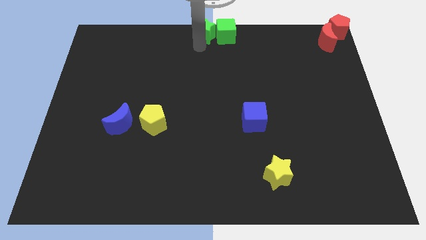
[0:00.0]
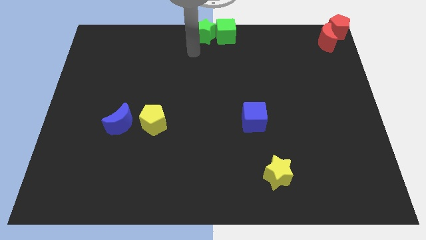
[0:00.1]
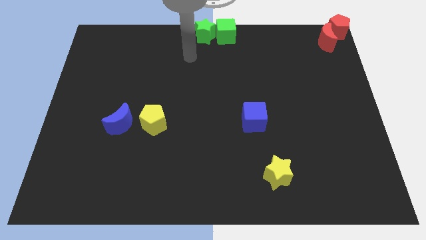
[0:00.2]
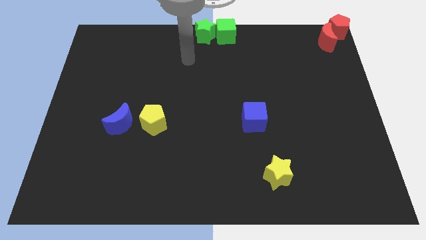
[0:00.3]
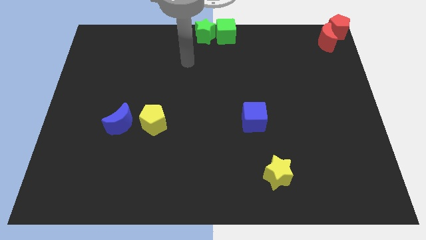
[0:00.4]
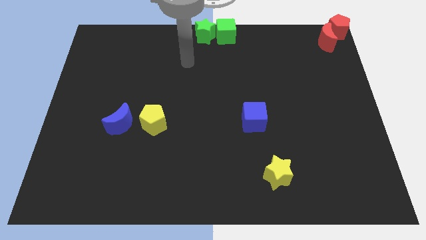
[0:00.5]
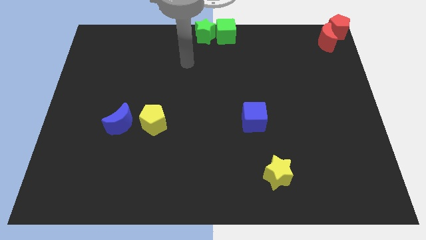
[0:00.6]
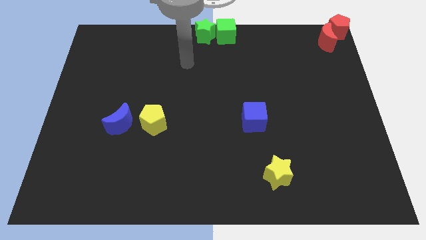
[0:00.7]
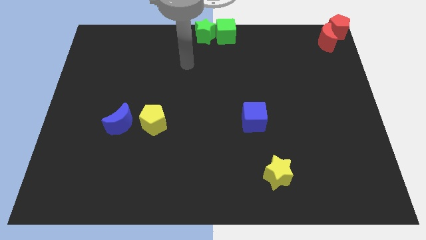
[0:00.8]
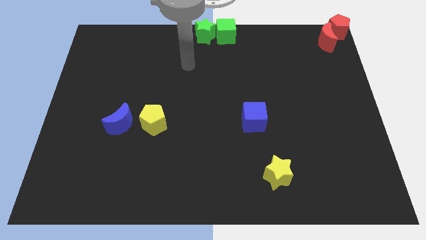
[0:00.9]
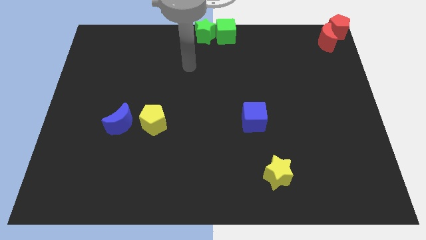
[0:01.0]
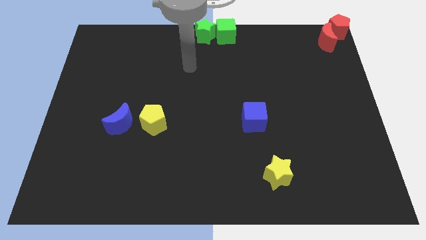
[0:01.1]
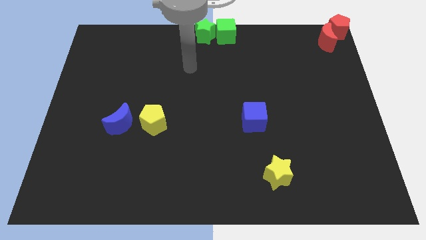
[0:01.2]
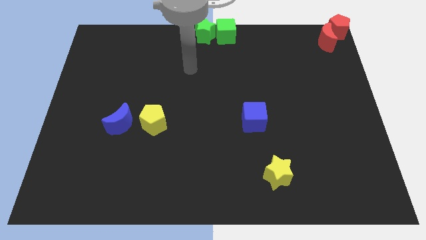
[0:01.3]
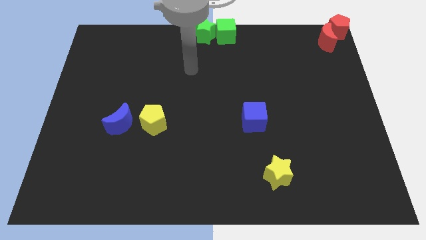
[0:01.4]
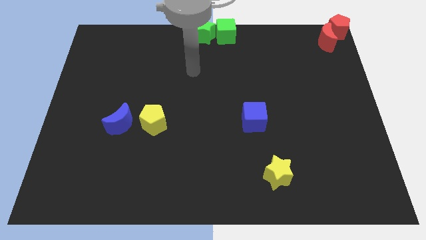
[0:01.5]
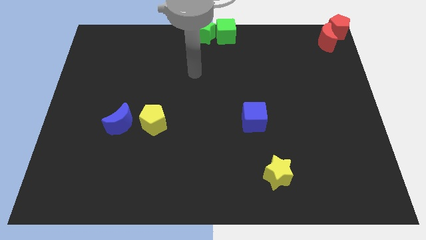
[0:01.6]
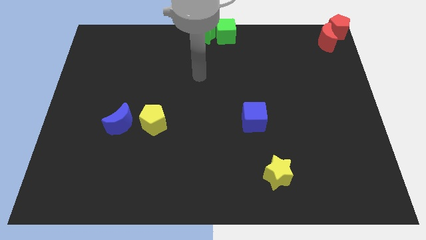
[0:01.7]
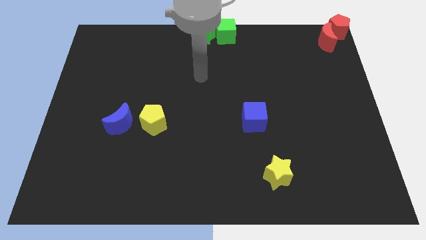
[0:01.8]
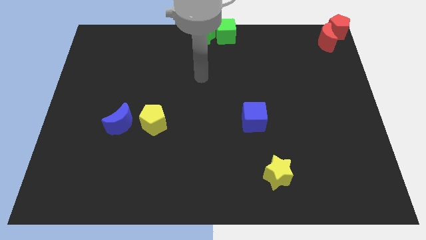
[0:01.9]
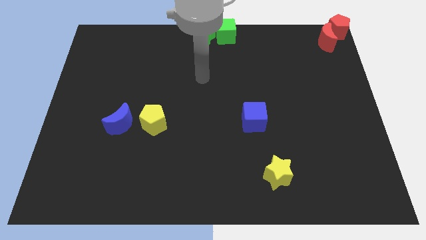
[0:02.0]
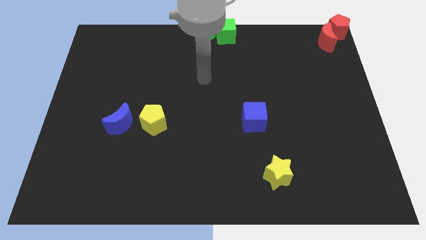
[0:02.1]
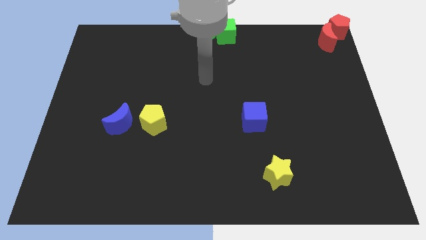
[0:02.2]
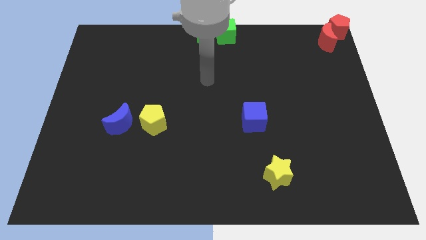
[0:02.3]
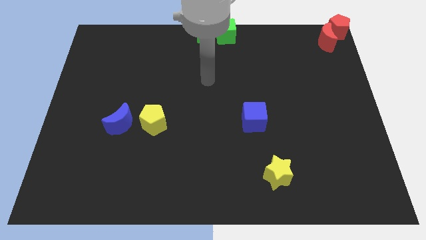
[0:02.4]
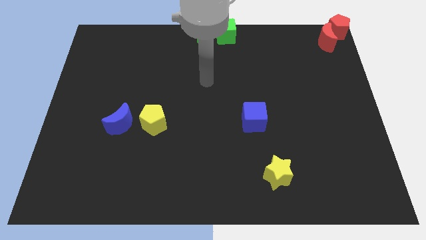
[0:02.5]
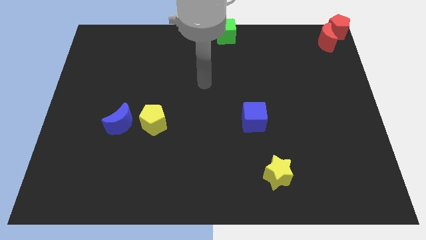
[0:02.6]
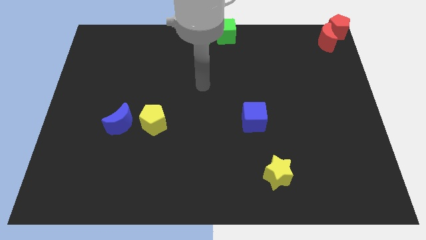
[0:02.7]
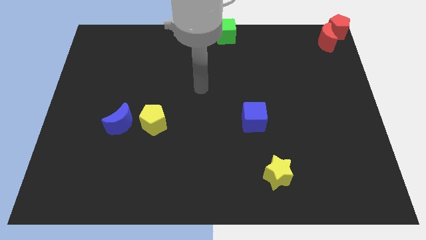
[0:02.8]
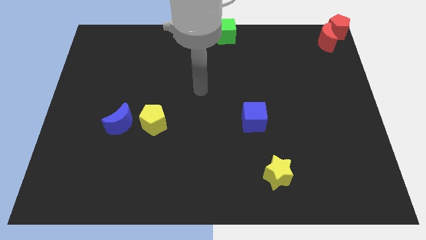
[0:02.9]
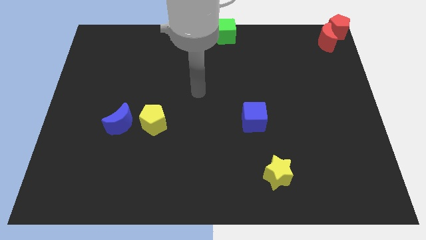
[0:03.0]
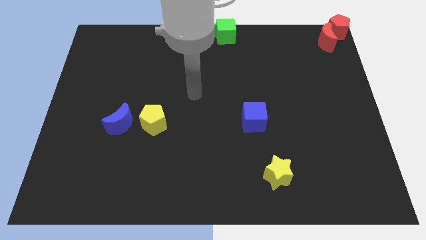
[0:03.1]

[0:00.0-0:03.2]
place arm in the center

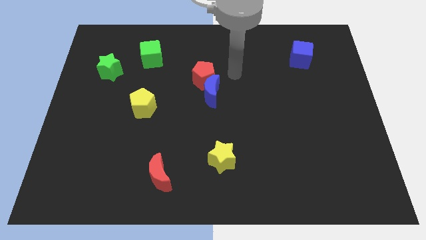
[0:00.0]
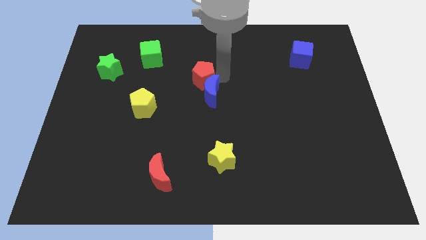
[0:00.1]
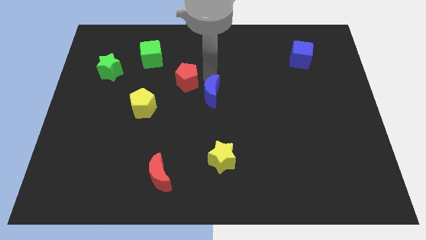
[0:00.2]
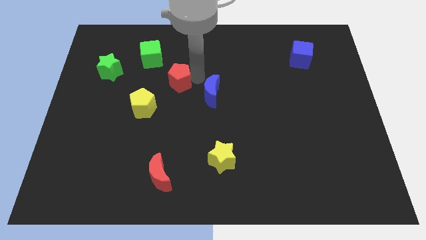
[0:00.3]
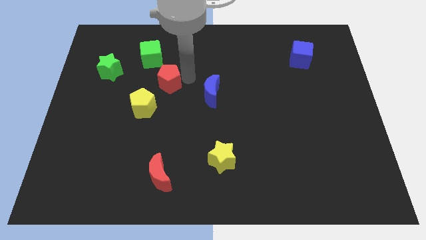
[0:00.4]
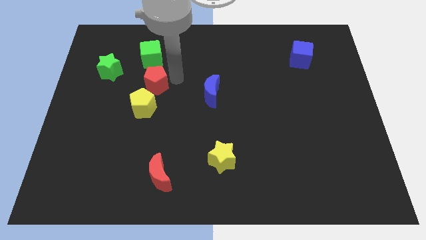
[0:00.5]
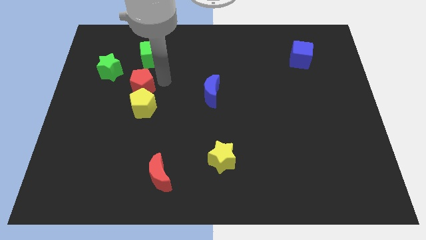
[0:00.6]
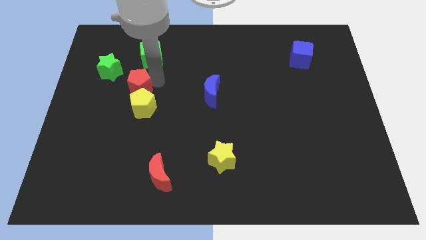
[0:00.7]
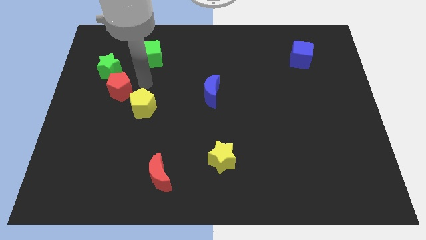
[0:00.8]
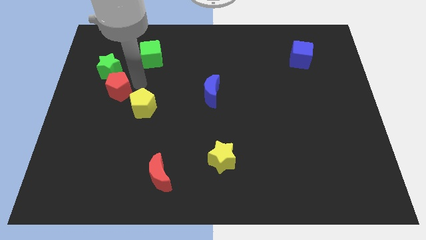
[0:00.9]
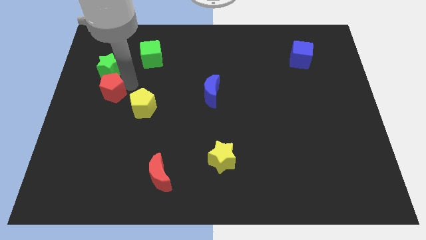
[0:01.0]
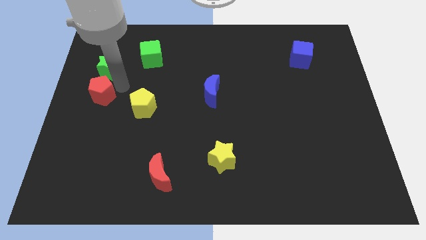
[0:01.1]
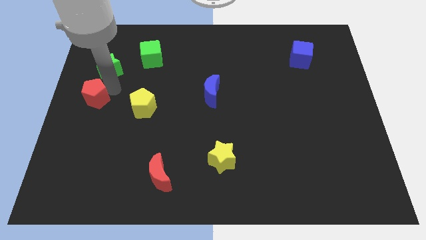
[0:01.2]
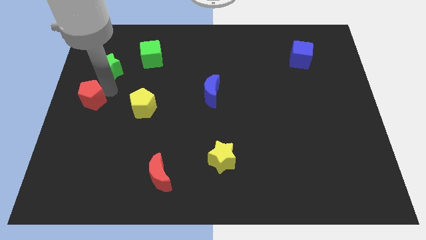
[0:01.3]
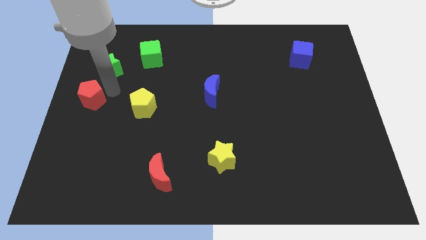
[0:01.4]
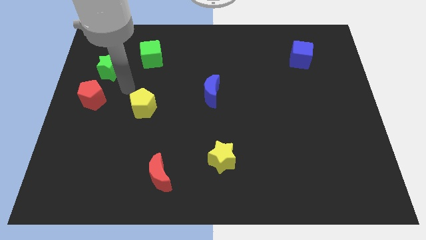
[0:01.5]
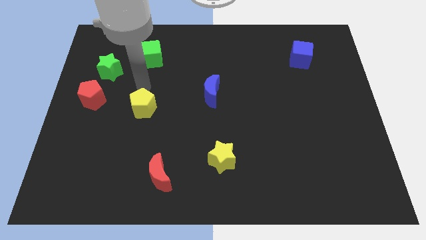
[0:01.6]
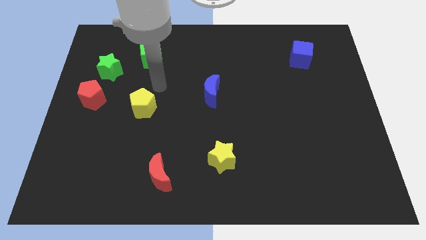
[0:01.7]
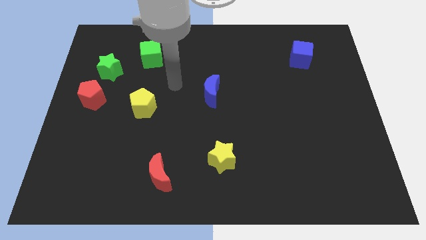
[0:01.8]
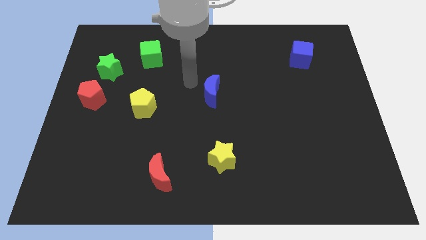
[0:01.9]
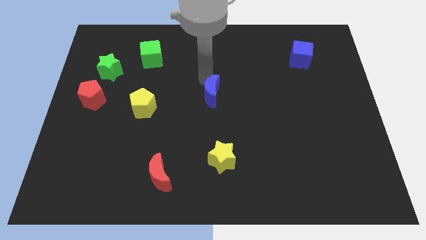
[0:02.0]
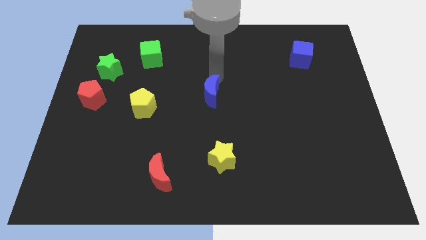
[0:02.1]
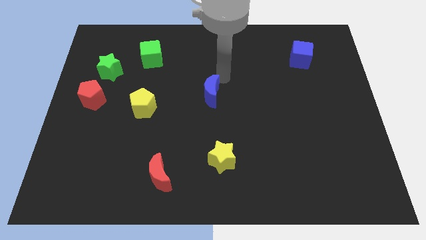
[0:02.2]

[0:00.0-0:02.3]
push the red pentagon to the center left

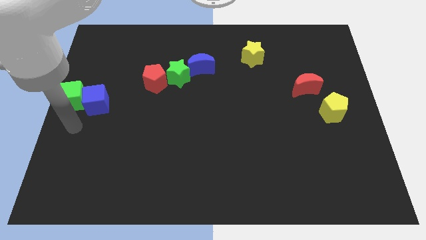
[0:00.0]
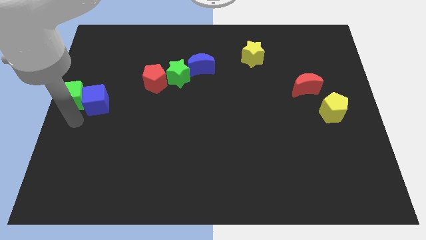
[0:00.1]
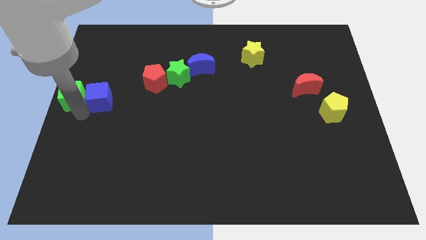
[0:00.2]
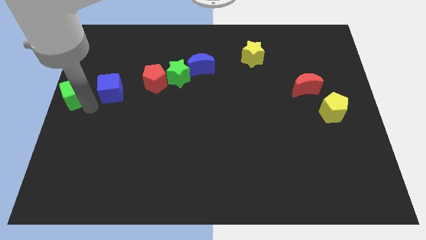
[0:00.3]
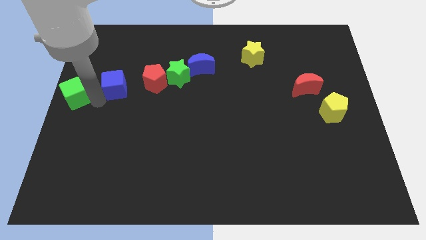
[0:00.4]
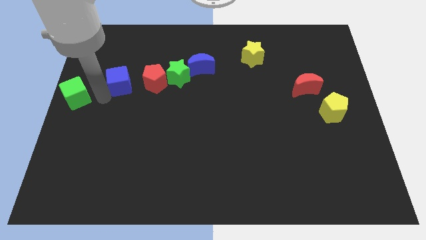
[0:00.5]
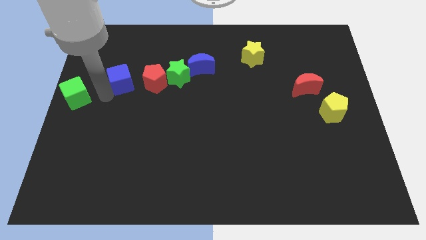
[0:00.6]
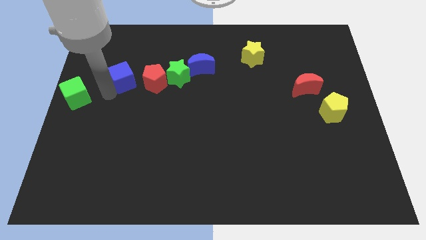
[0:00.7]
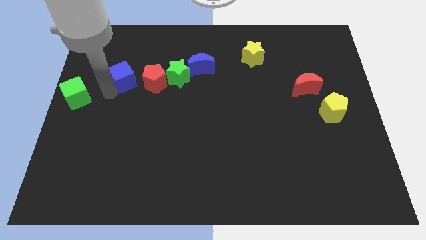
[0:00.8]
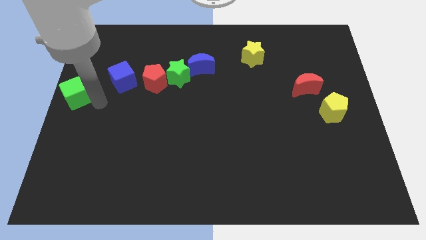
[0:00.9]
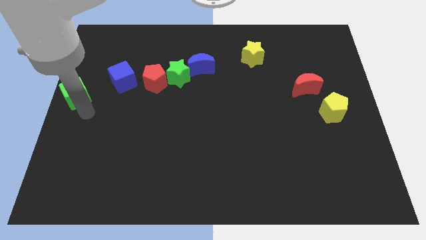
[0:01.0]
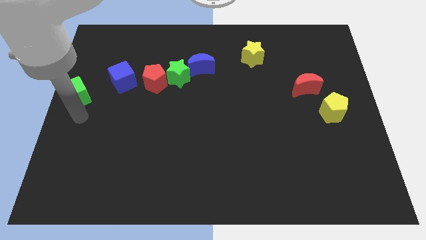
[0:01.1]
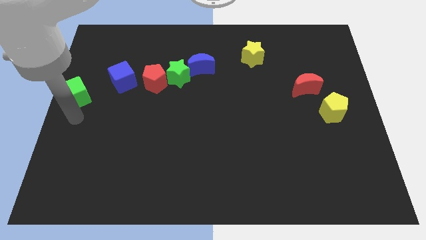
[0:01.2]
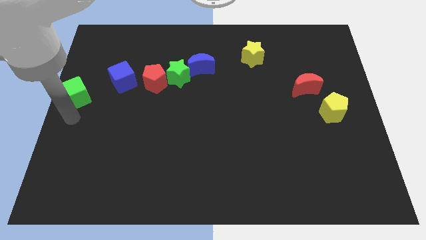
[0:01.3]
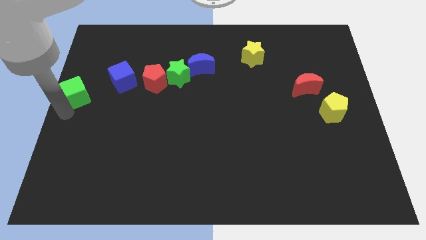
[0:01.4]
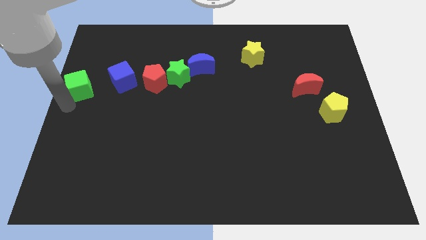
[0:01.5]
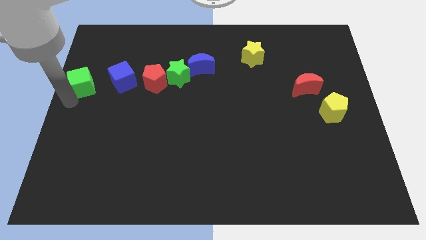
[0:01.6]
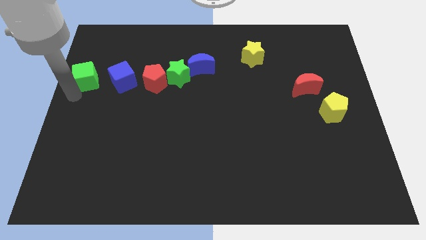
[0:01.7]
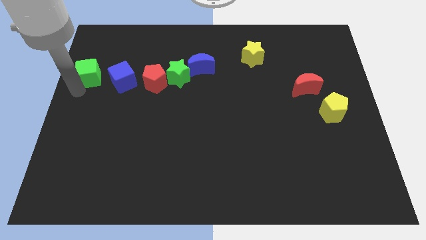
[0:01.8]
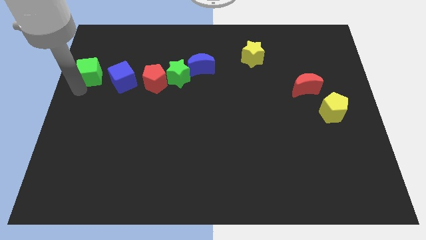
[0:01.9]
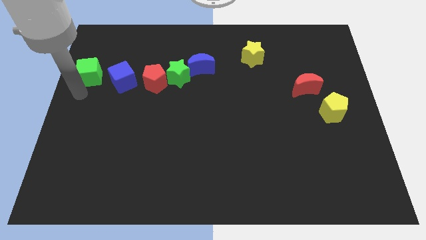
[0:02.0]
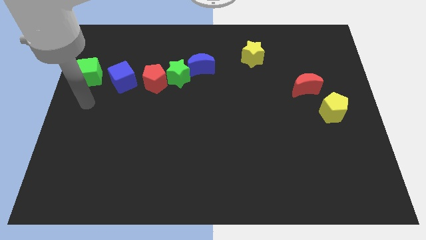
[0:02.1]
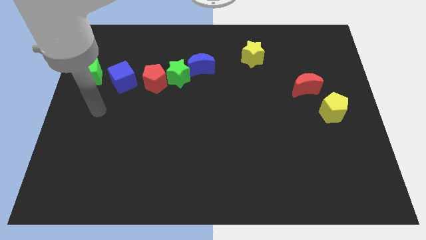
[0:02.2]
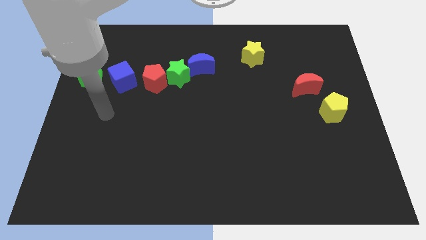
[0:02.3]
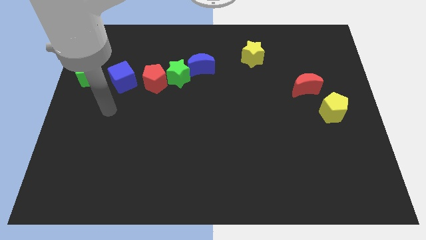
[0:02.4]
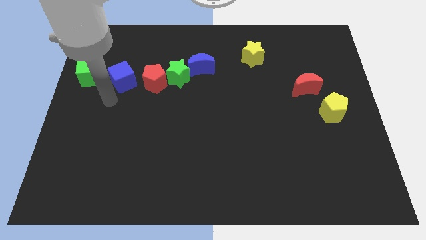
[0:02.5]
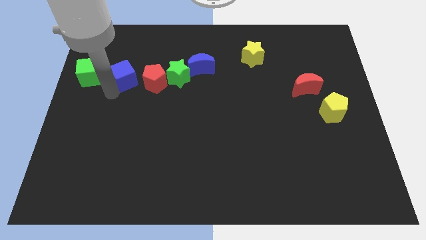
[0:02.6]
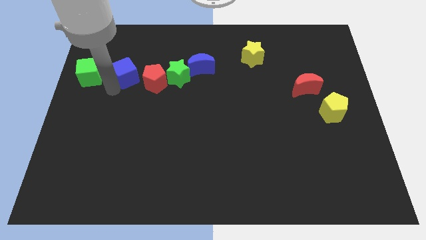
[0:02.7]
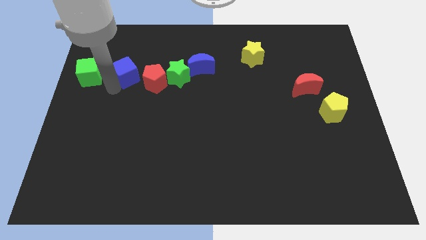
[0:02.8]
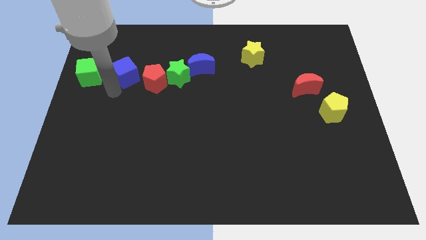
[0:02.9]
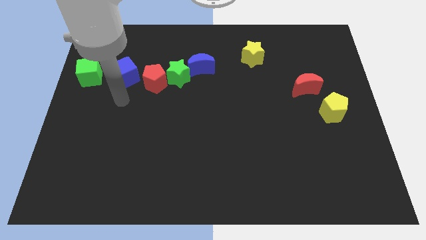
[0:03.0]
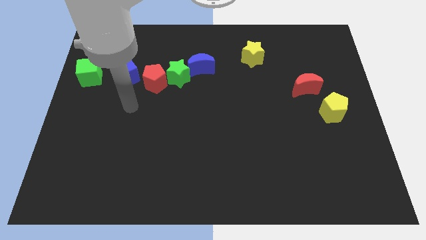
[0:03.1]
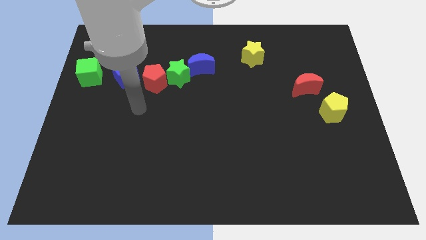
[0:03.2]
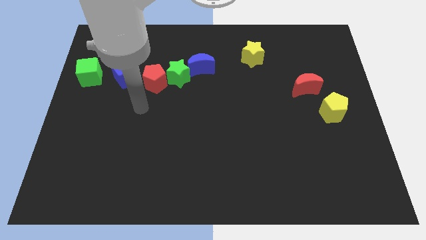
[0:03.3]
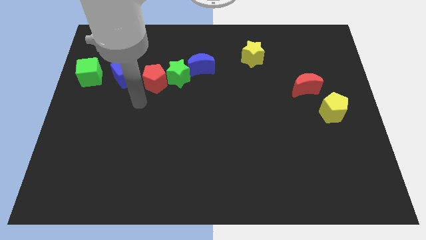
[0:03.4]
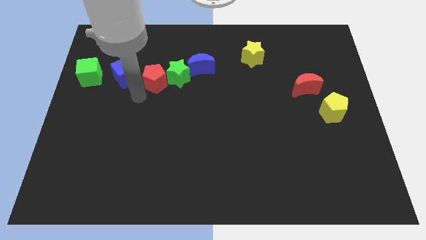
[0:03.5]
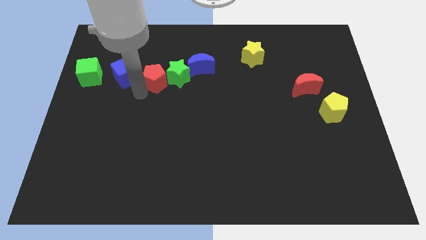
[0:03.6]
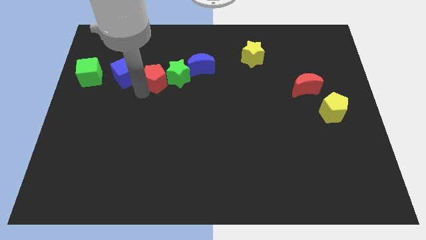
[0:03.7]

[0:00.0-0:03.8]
place the blue cube to the right side of the green cube
